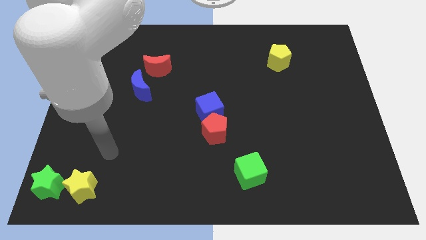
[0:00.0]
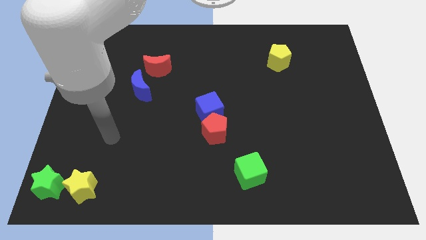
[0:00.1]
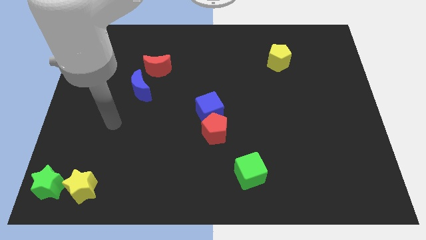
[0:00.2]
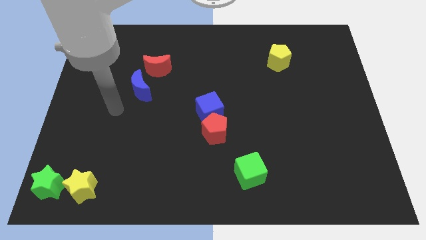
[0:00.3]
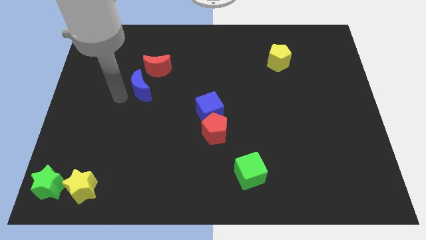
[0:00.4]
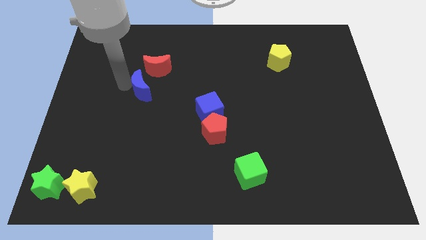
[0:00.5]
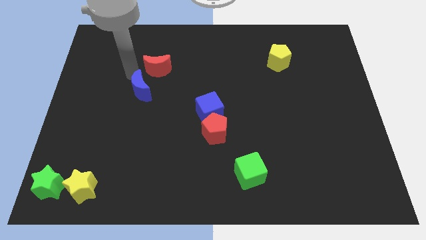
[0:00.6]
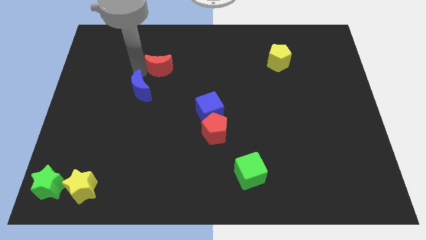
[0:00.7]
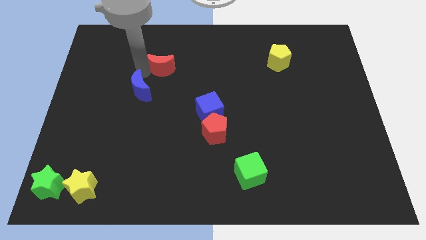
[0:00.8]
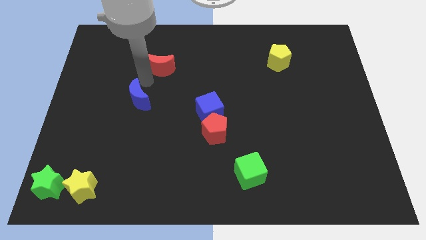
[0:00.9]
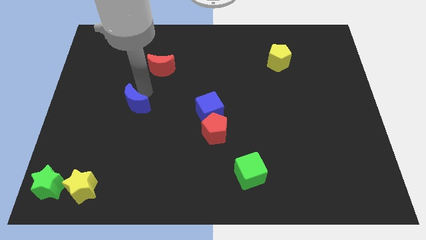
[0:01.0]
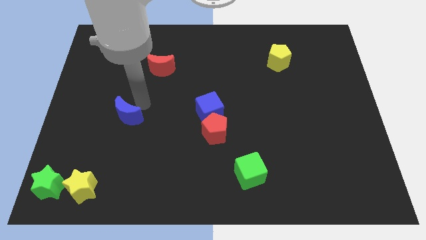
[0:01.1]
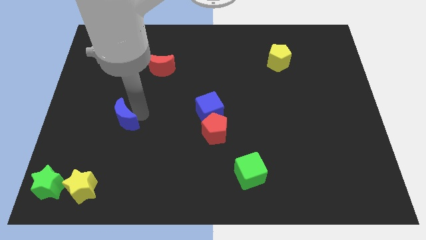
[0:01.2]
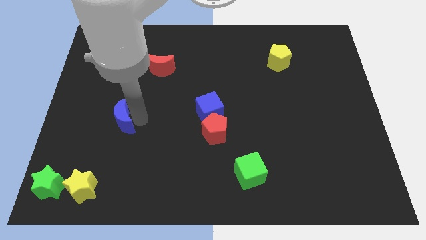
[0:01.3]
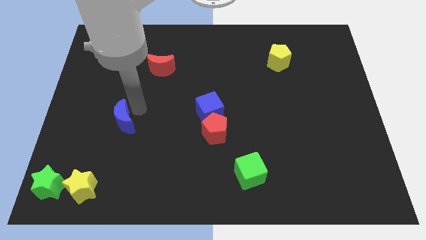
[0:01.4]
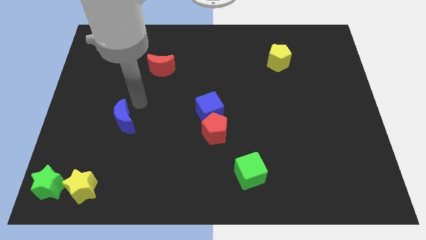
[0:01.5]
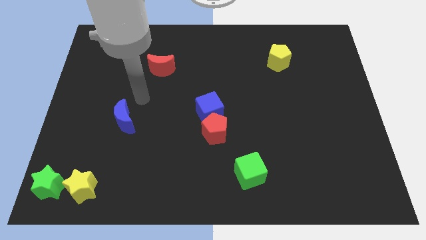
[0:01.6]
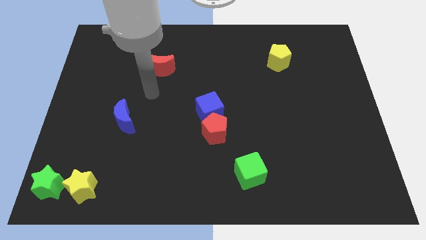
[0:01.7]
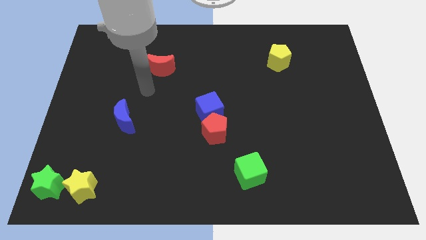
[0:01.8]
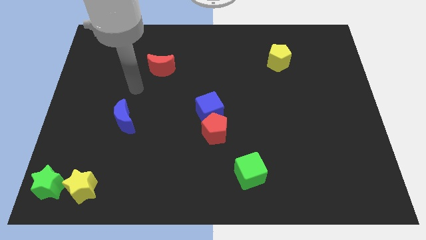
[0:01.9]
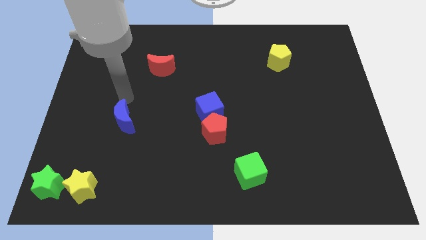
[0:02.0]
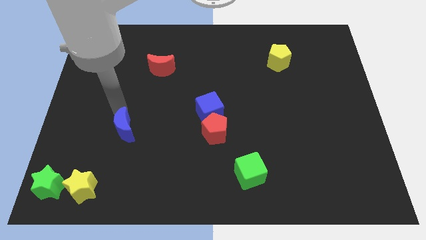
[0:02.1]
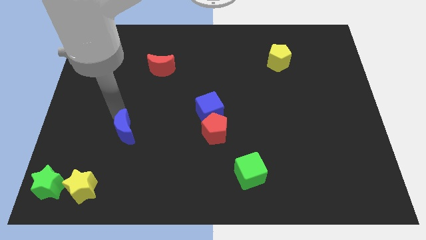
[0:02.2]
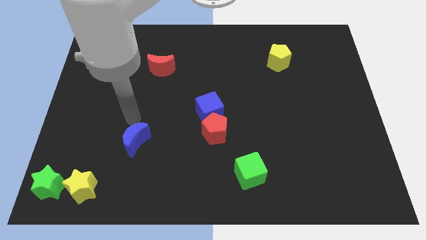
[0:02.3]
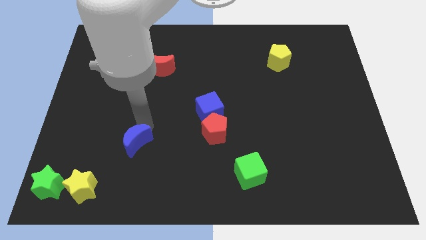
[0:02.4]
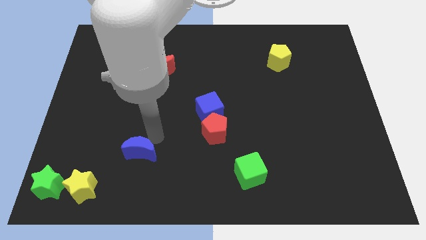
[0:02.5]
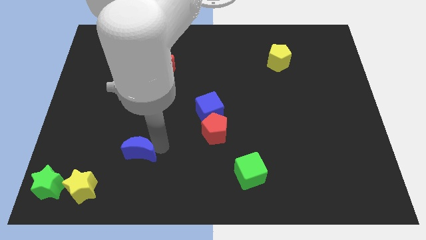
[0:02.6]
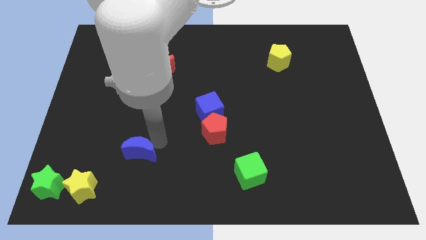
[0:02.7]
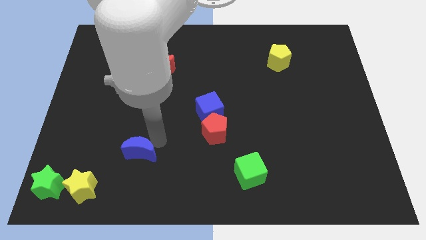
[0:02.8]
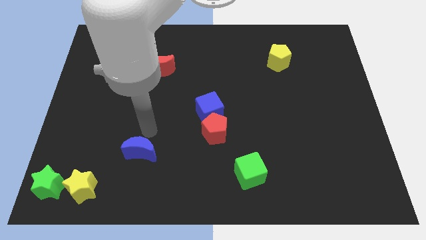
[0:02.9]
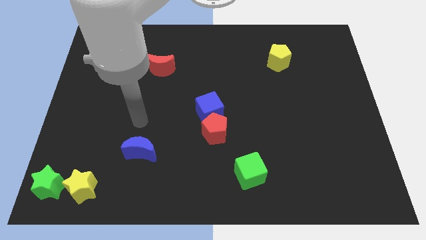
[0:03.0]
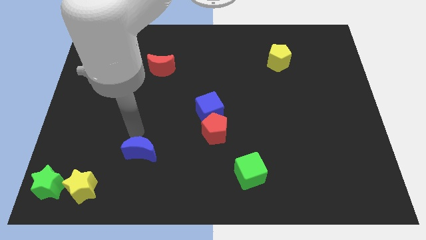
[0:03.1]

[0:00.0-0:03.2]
move the blue crescent away from the red moon

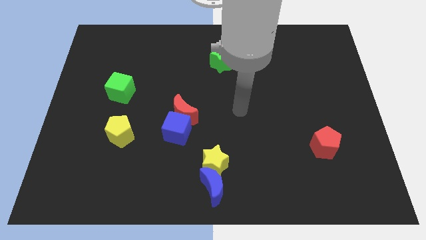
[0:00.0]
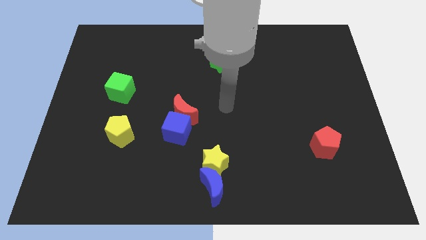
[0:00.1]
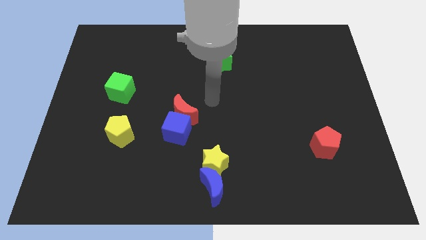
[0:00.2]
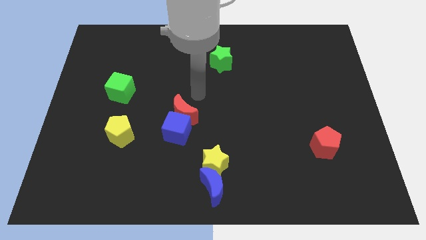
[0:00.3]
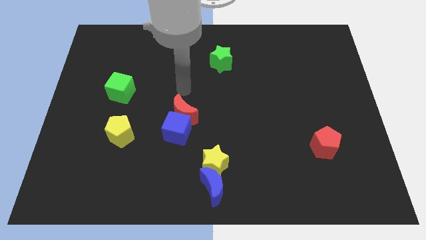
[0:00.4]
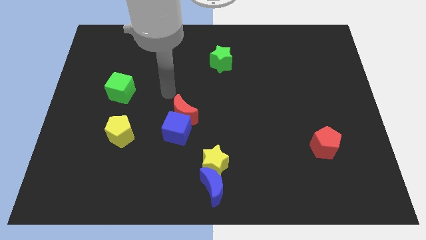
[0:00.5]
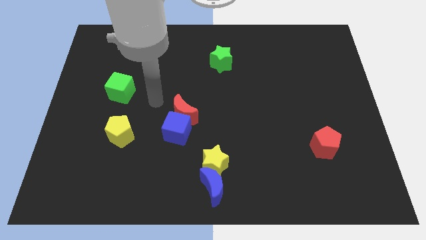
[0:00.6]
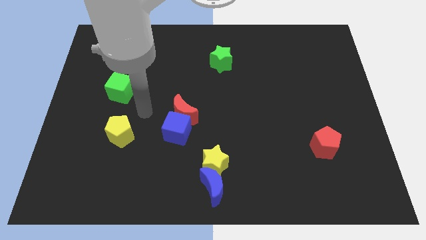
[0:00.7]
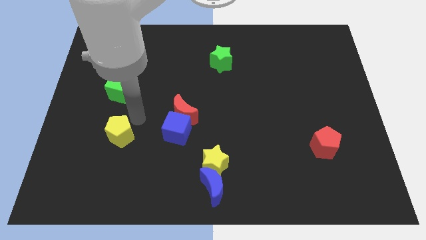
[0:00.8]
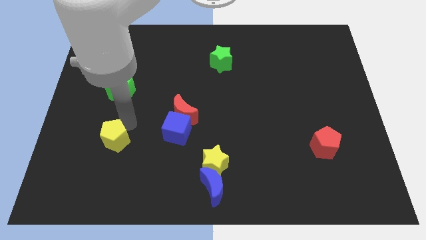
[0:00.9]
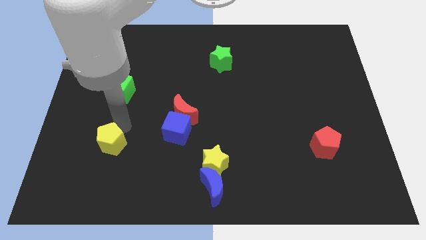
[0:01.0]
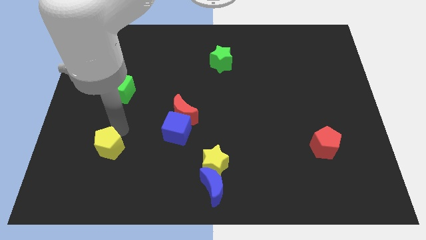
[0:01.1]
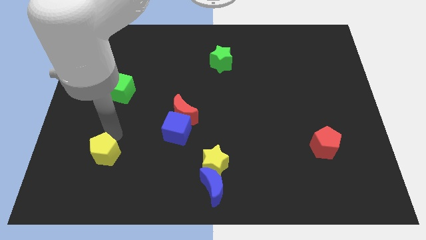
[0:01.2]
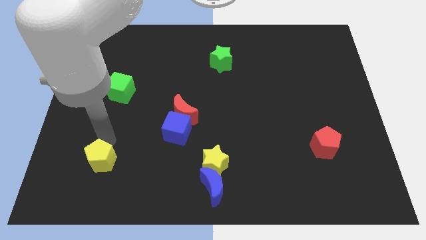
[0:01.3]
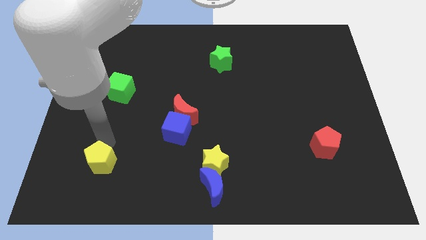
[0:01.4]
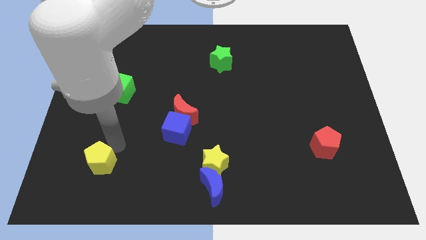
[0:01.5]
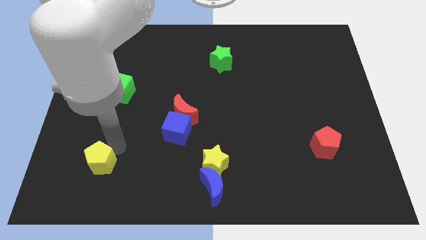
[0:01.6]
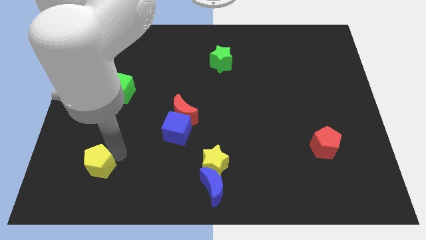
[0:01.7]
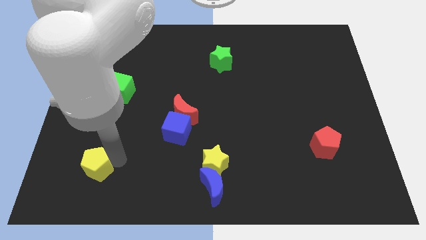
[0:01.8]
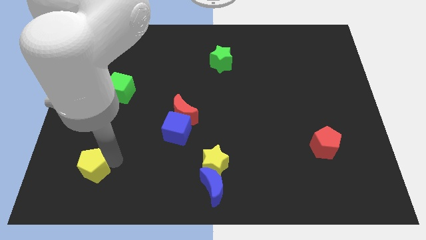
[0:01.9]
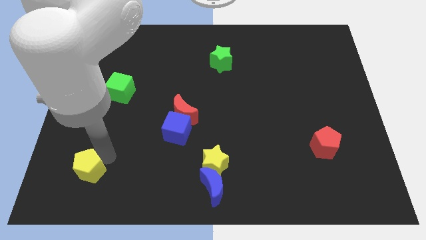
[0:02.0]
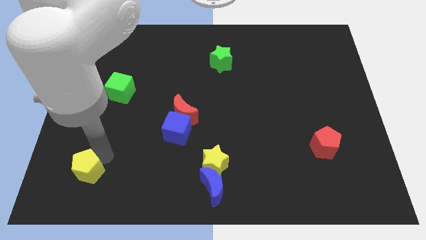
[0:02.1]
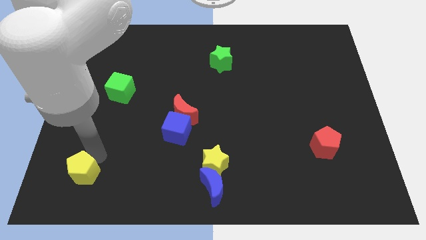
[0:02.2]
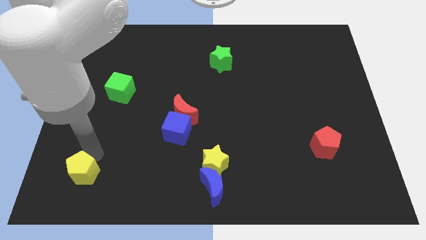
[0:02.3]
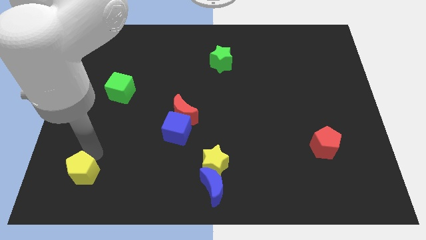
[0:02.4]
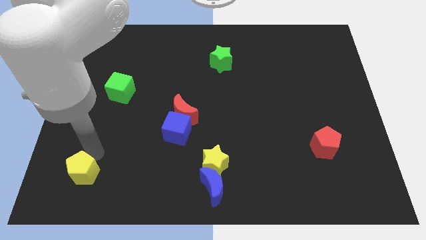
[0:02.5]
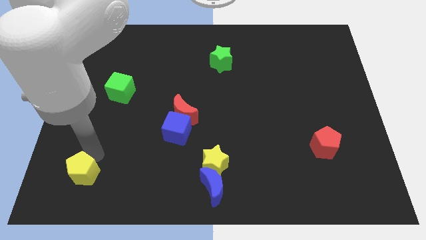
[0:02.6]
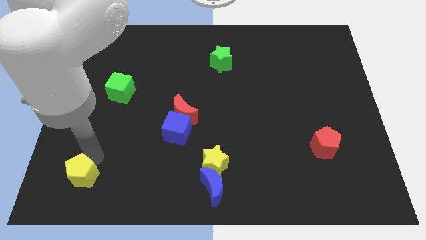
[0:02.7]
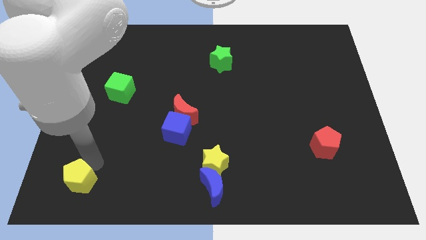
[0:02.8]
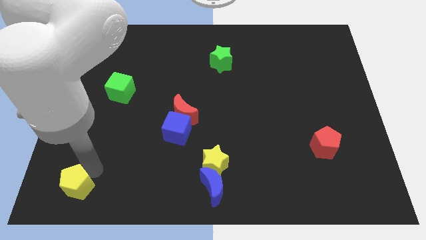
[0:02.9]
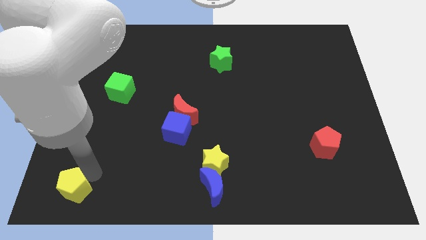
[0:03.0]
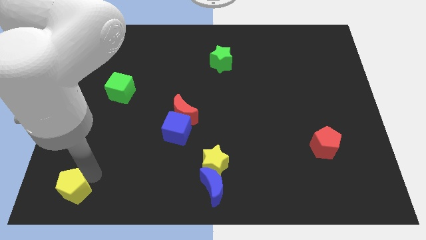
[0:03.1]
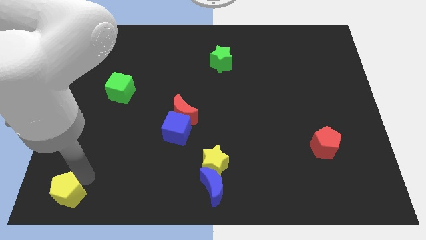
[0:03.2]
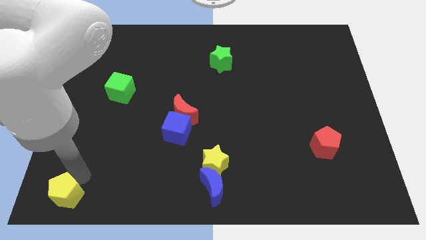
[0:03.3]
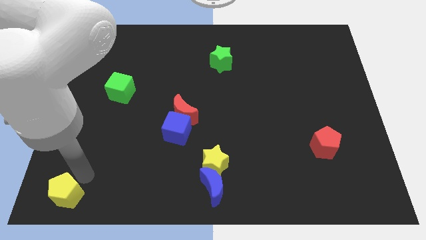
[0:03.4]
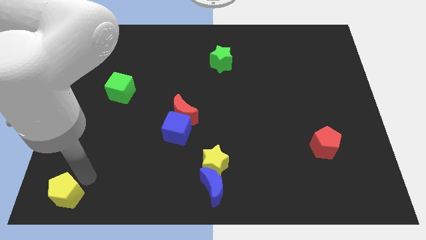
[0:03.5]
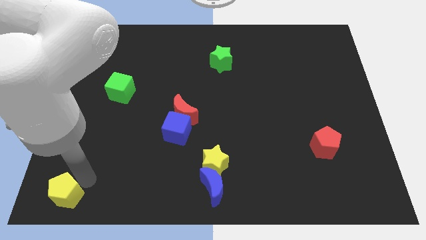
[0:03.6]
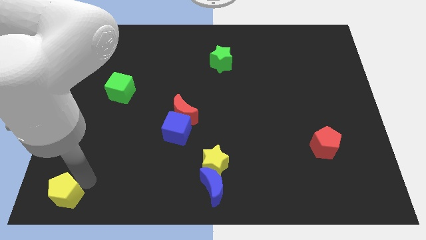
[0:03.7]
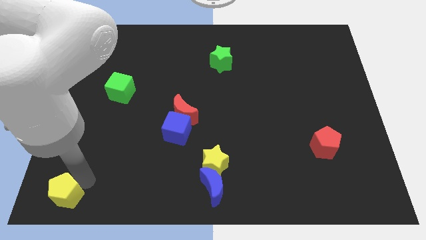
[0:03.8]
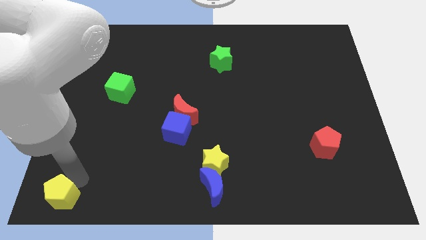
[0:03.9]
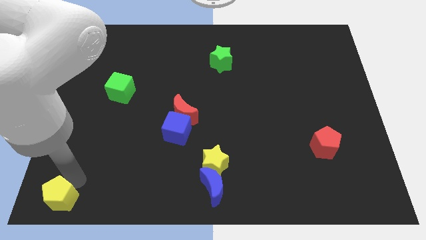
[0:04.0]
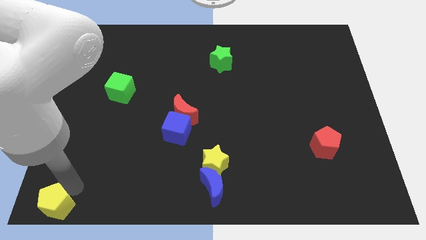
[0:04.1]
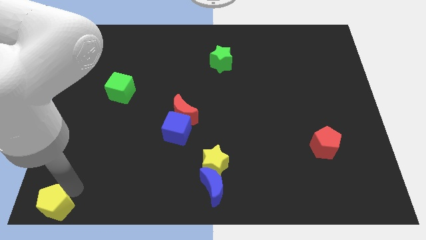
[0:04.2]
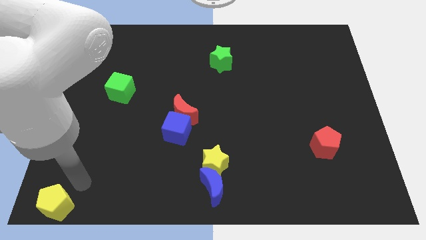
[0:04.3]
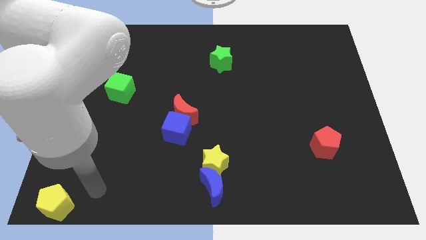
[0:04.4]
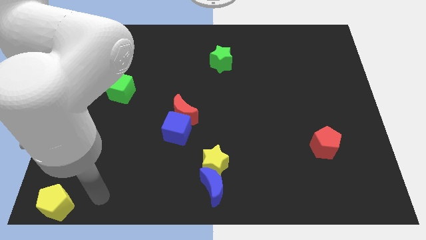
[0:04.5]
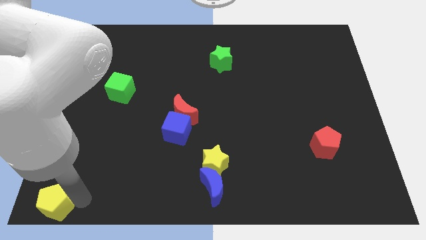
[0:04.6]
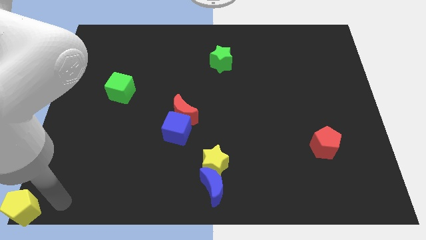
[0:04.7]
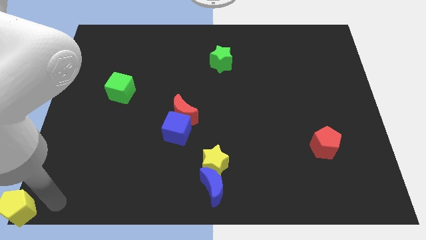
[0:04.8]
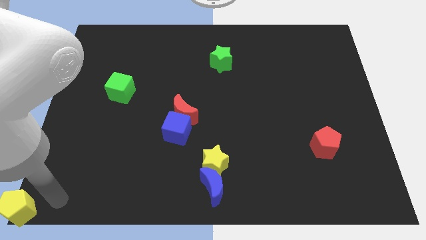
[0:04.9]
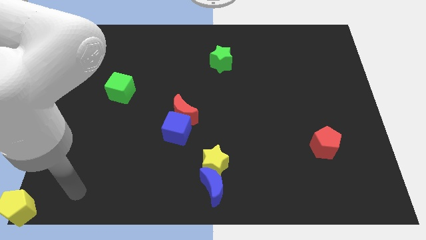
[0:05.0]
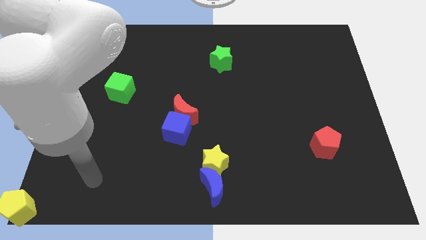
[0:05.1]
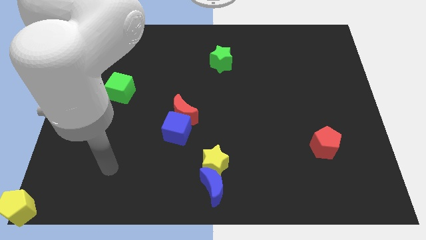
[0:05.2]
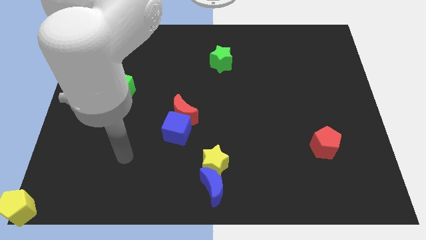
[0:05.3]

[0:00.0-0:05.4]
move the yellow pentagon to the bottom left corner

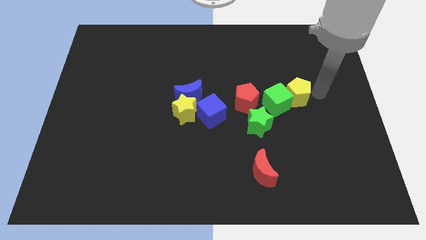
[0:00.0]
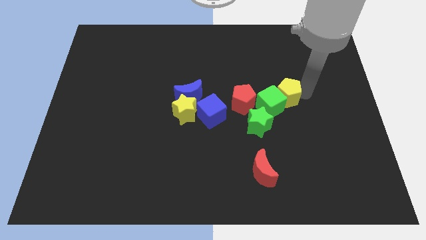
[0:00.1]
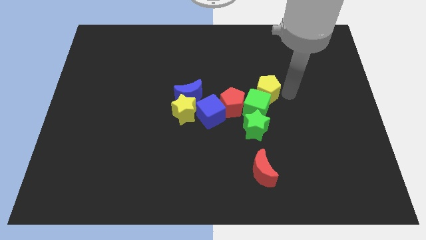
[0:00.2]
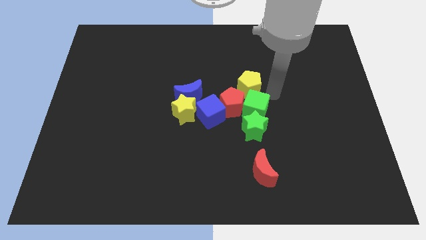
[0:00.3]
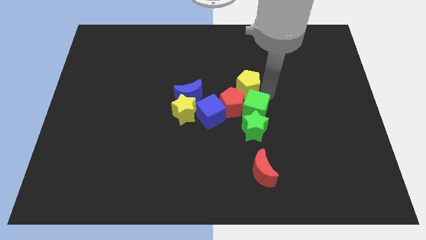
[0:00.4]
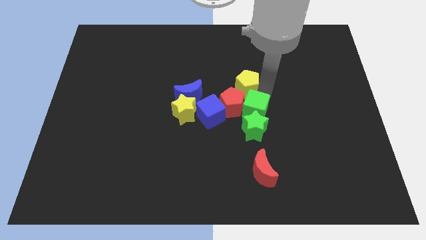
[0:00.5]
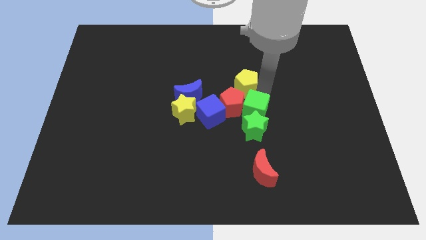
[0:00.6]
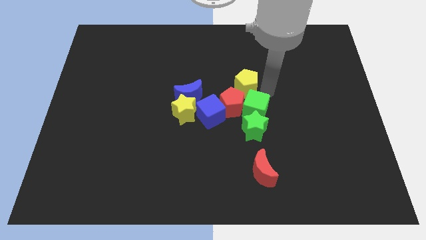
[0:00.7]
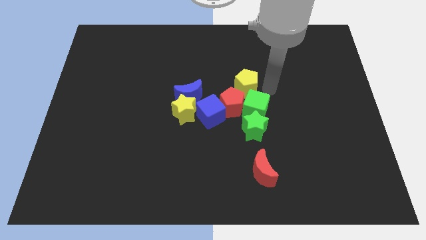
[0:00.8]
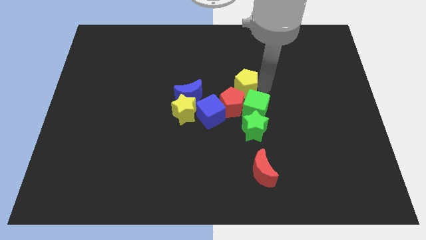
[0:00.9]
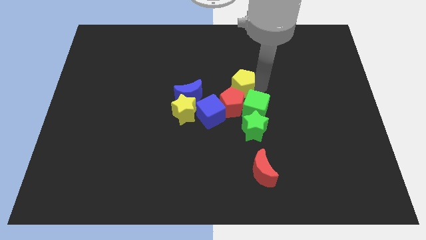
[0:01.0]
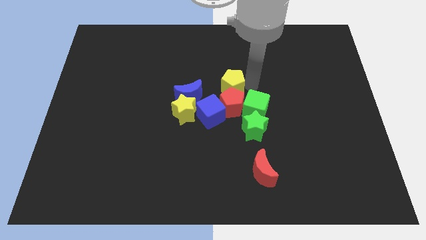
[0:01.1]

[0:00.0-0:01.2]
move the yellow pentagon to the top of the red pentagon
